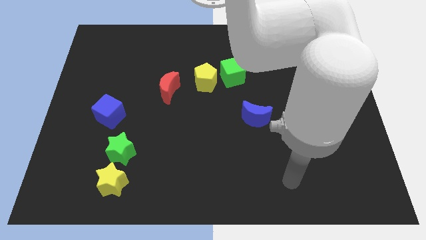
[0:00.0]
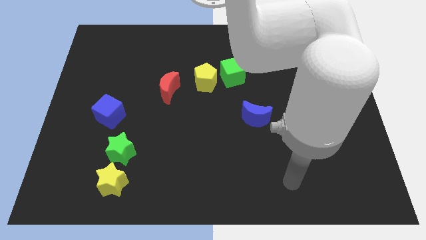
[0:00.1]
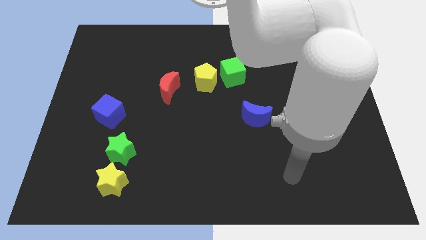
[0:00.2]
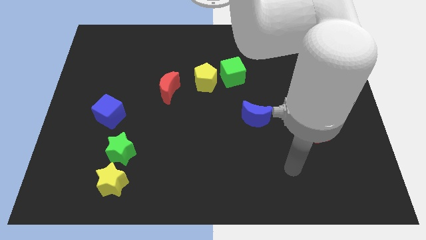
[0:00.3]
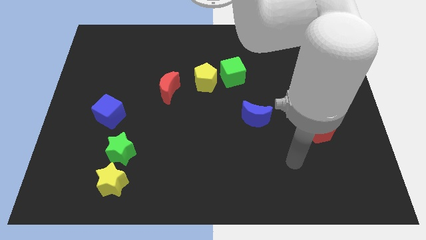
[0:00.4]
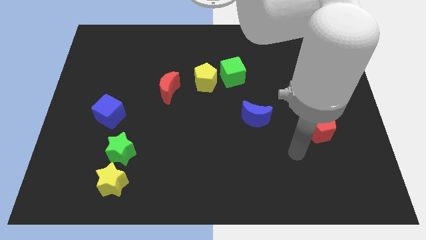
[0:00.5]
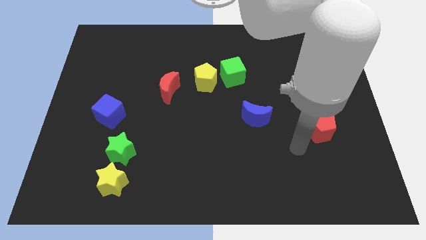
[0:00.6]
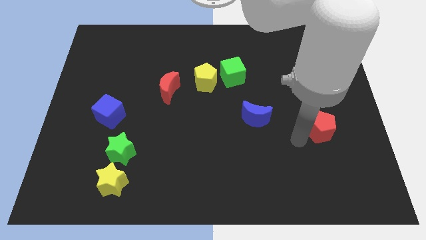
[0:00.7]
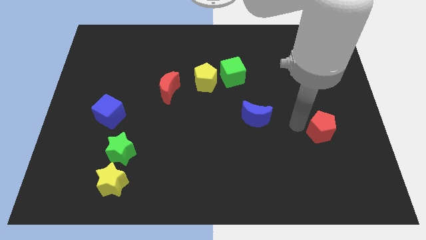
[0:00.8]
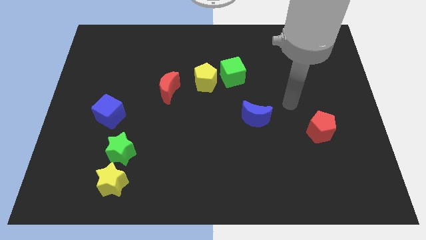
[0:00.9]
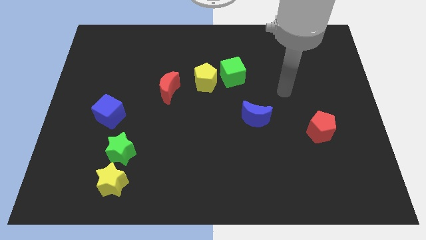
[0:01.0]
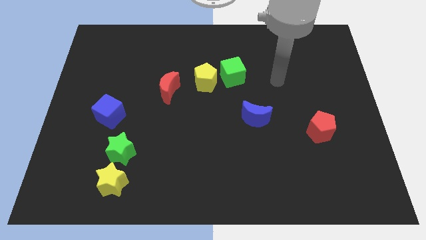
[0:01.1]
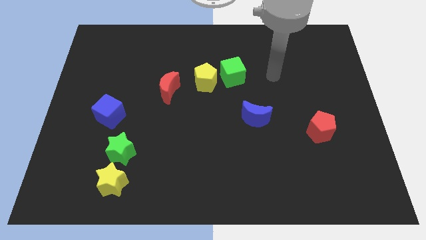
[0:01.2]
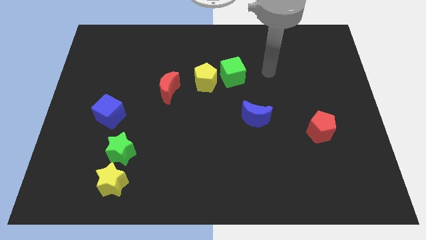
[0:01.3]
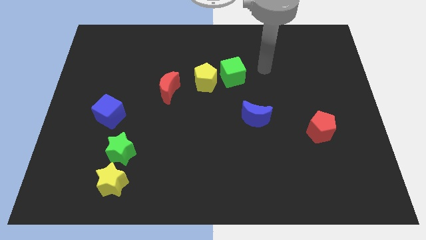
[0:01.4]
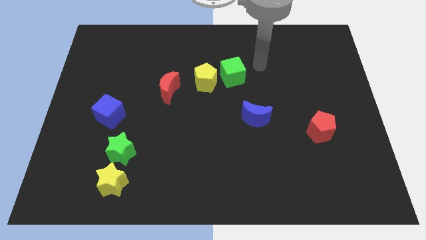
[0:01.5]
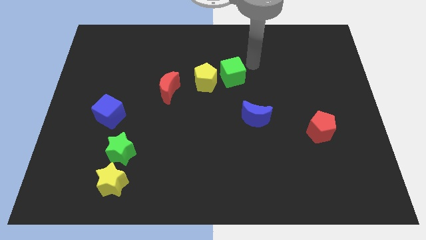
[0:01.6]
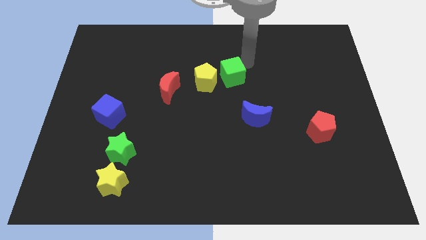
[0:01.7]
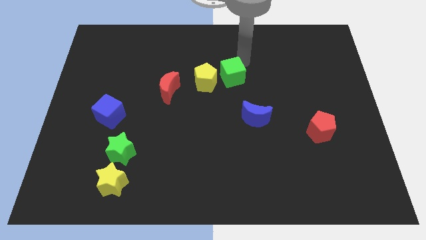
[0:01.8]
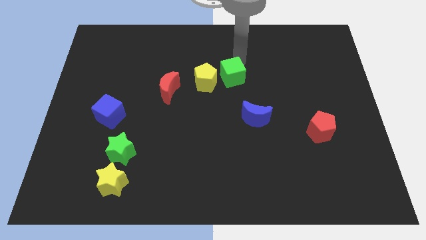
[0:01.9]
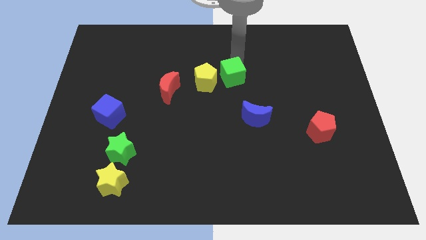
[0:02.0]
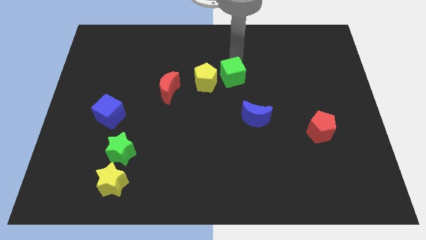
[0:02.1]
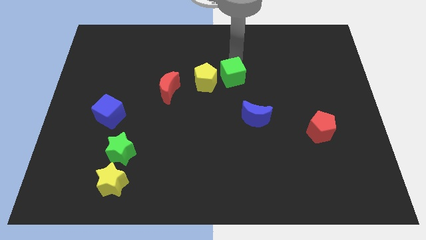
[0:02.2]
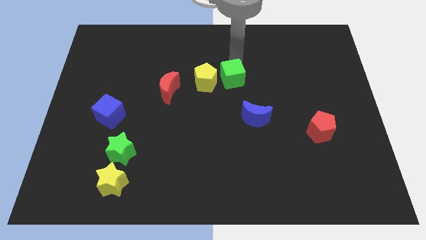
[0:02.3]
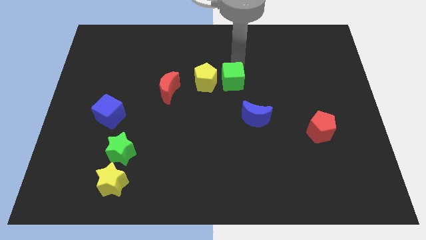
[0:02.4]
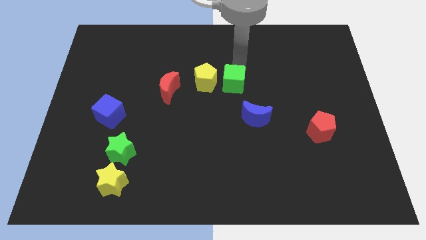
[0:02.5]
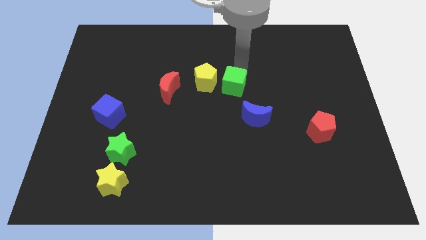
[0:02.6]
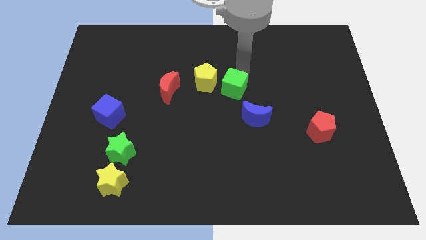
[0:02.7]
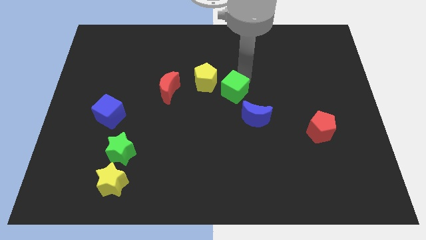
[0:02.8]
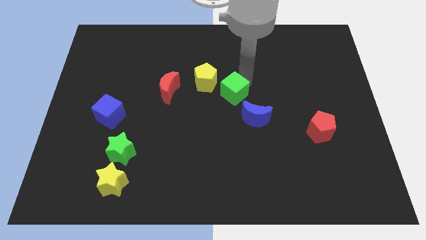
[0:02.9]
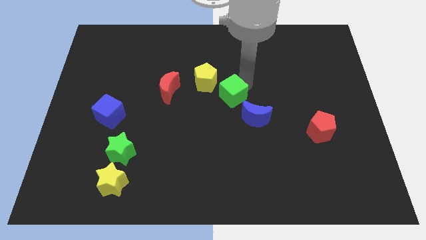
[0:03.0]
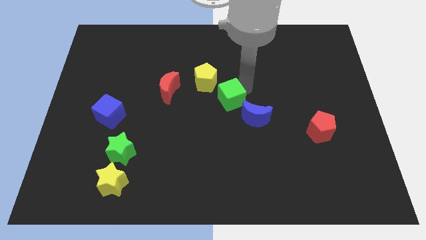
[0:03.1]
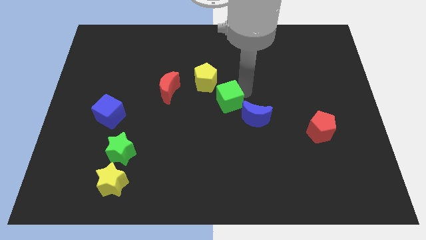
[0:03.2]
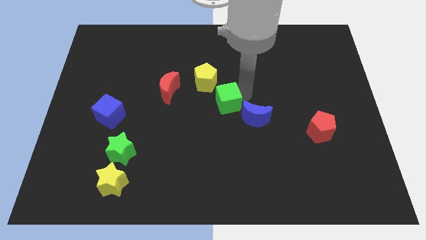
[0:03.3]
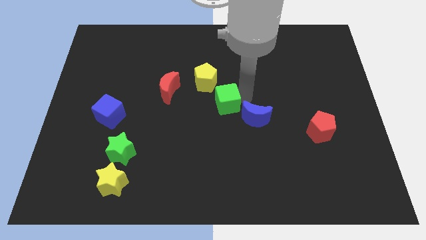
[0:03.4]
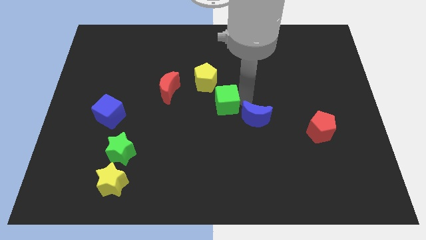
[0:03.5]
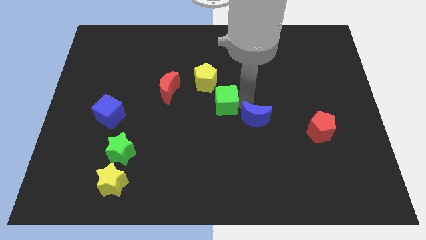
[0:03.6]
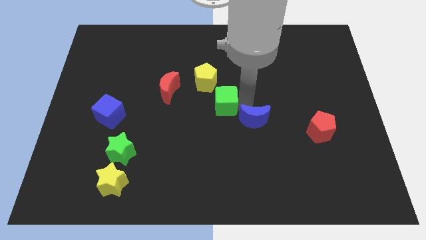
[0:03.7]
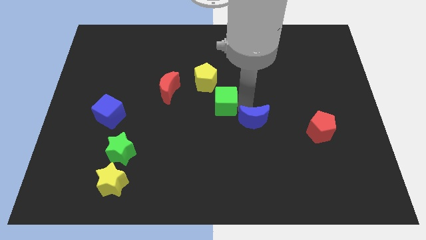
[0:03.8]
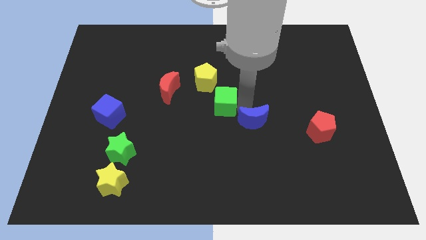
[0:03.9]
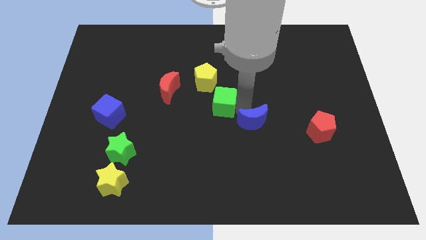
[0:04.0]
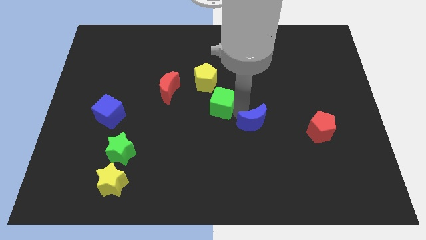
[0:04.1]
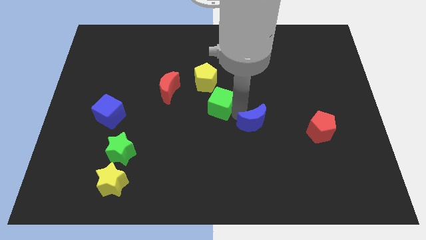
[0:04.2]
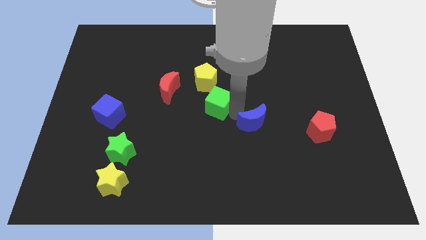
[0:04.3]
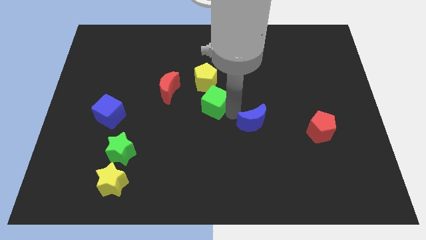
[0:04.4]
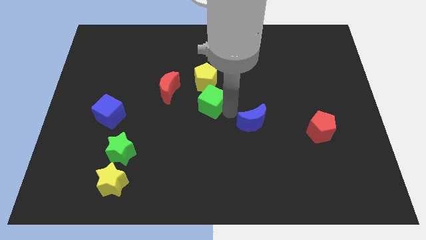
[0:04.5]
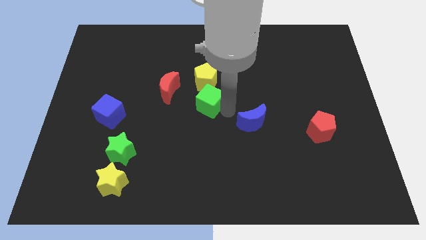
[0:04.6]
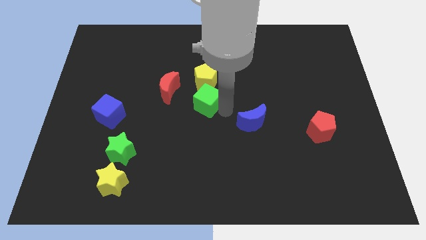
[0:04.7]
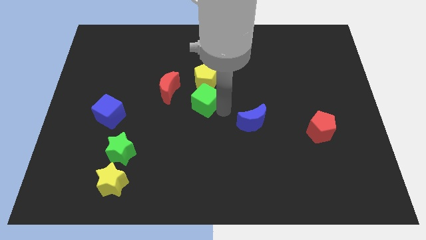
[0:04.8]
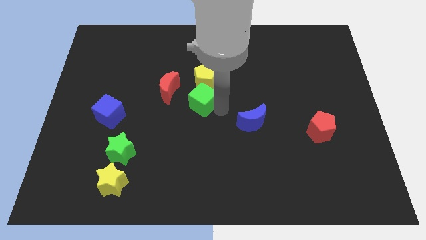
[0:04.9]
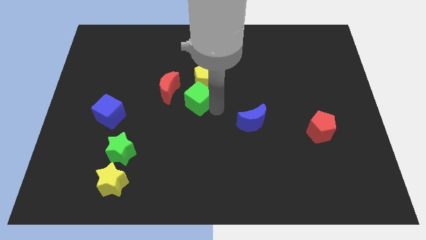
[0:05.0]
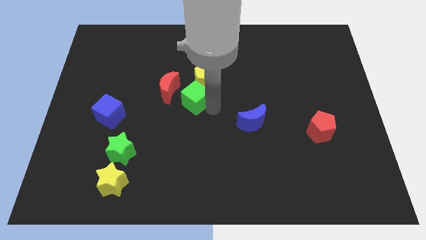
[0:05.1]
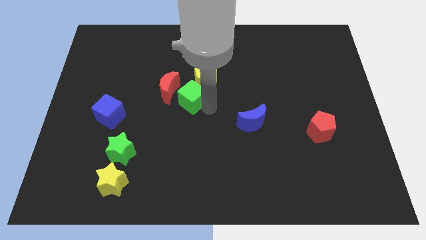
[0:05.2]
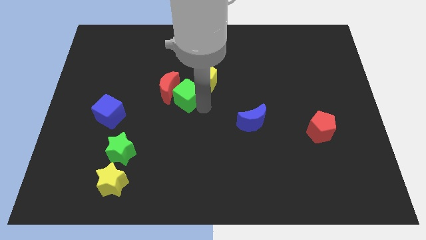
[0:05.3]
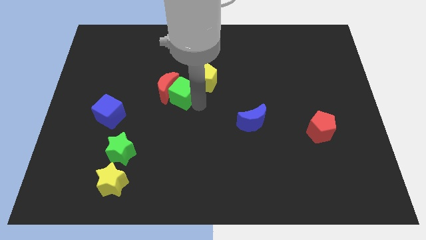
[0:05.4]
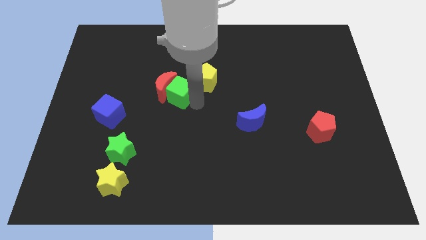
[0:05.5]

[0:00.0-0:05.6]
push the green cube next to the red moon

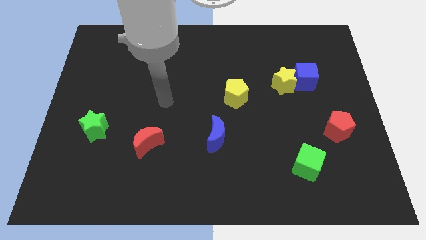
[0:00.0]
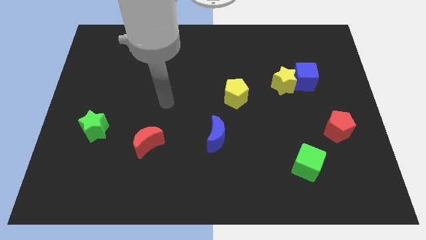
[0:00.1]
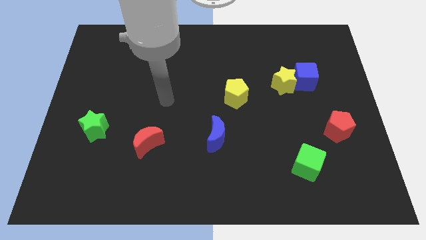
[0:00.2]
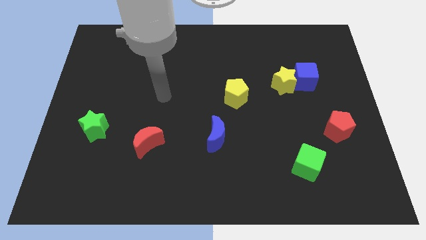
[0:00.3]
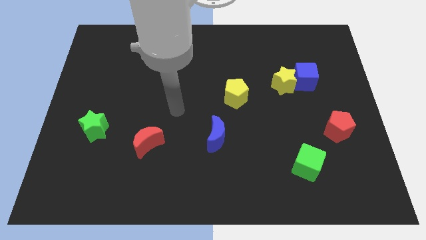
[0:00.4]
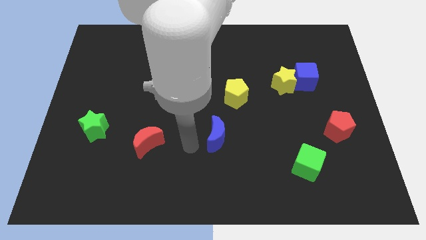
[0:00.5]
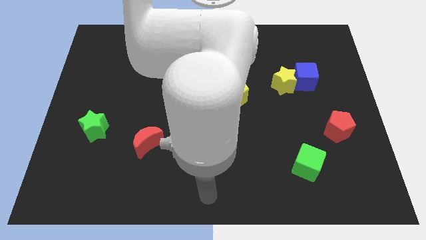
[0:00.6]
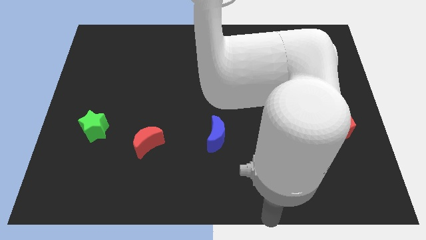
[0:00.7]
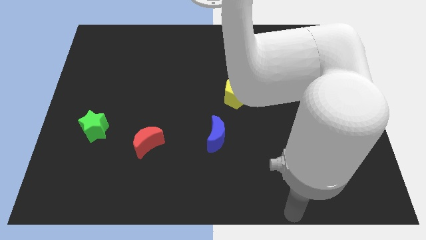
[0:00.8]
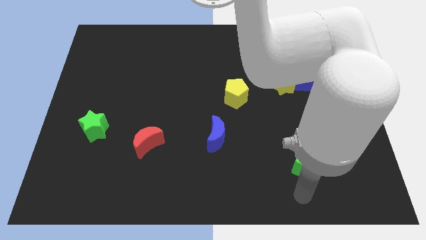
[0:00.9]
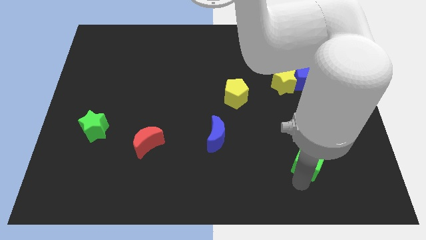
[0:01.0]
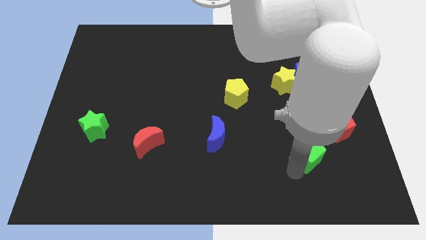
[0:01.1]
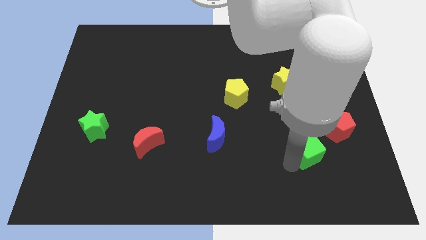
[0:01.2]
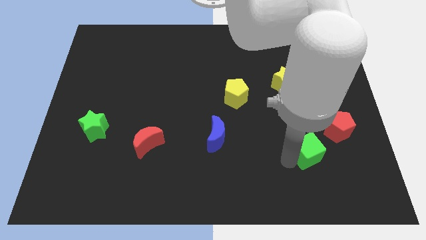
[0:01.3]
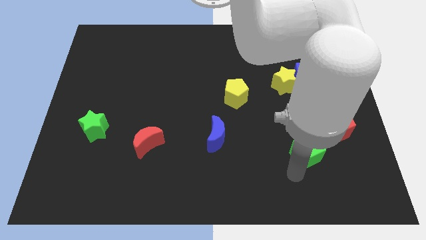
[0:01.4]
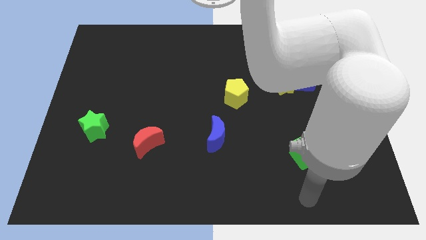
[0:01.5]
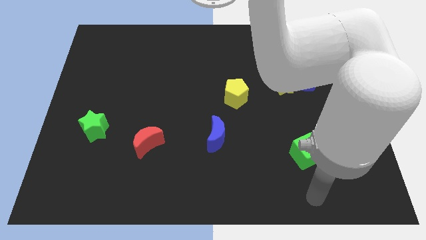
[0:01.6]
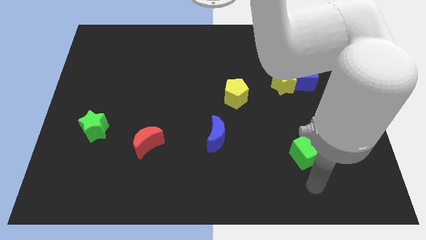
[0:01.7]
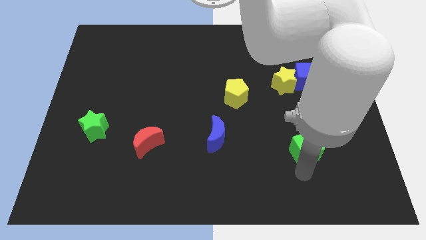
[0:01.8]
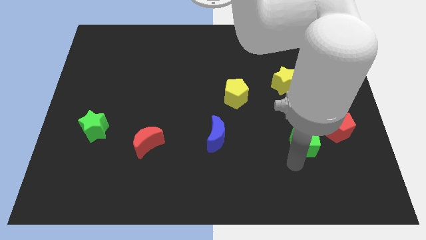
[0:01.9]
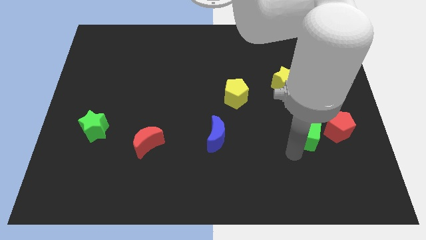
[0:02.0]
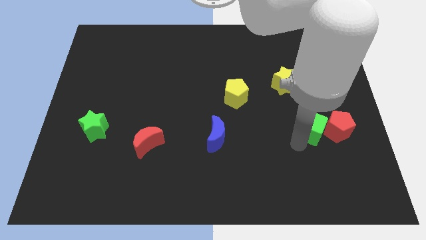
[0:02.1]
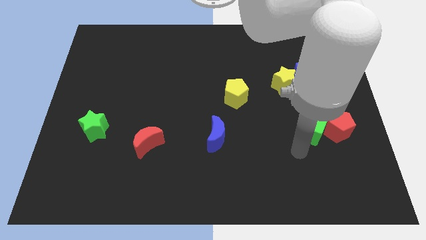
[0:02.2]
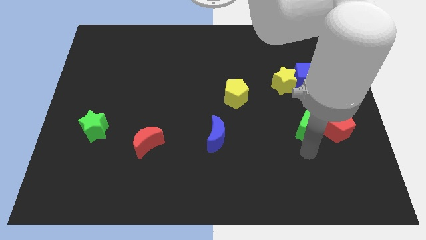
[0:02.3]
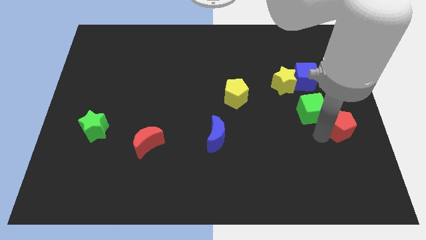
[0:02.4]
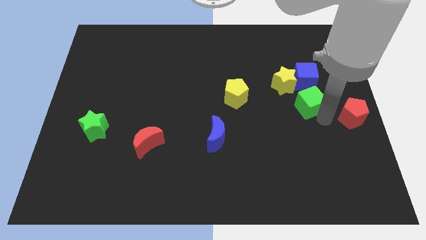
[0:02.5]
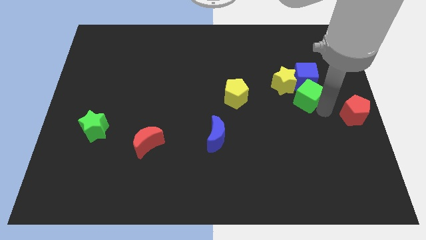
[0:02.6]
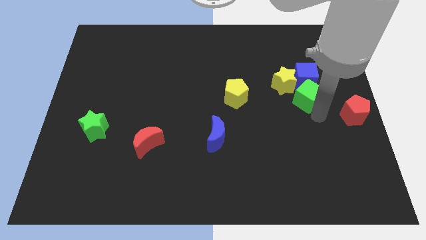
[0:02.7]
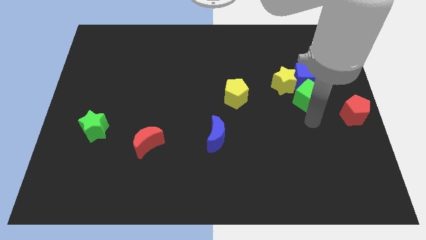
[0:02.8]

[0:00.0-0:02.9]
move the green cube to the blue cube
